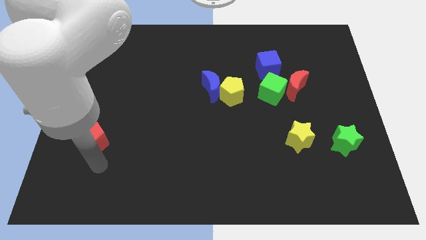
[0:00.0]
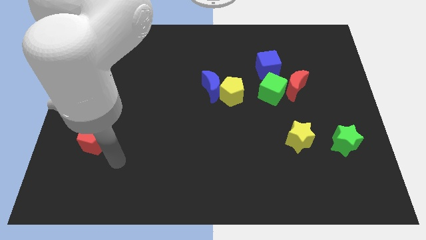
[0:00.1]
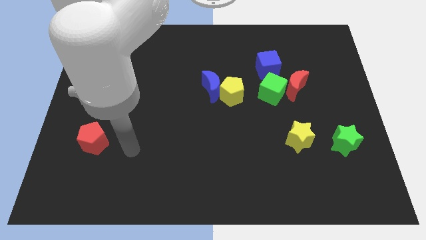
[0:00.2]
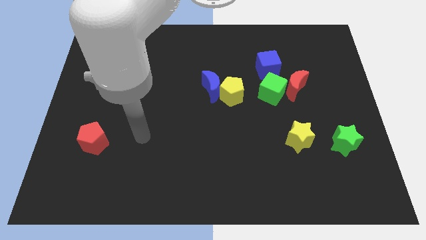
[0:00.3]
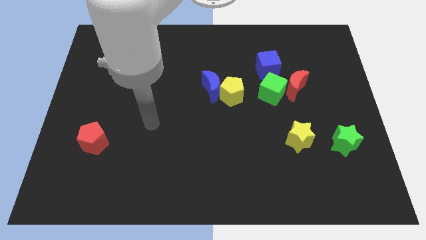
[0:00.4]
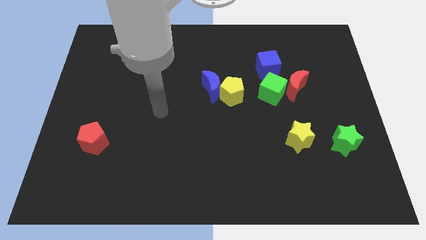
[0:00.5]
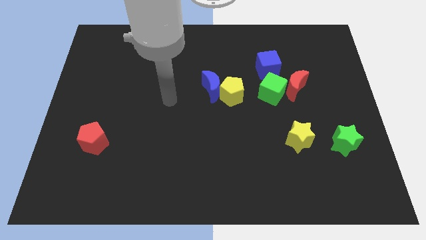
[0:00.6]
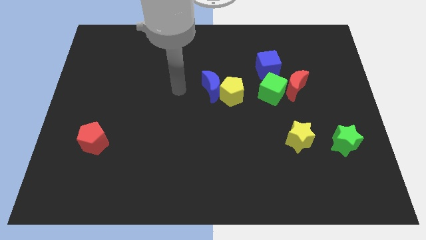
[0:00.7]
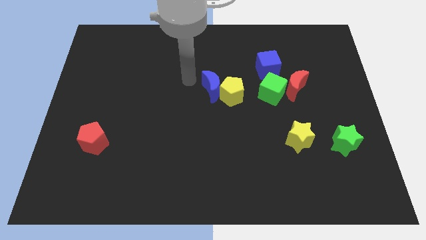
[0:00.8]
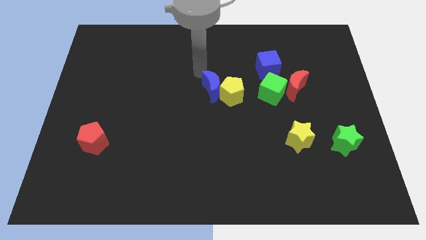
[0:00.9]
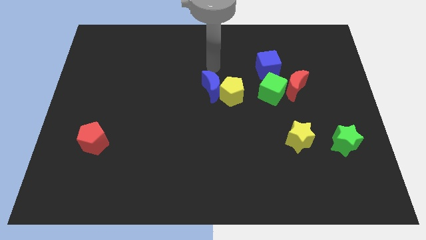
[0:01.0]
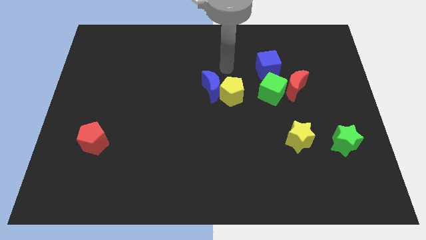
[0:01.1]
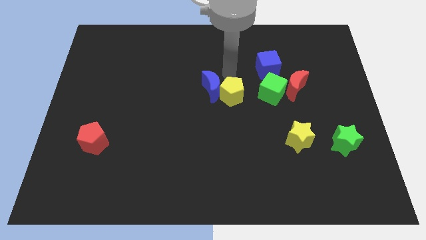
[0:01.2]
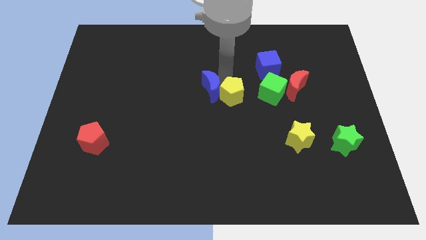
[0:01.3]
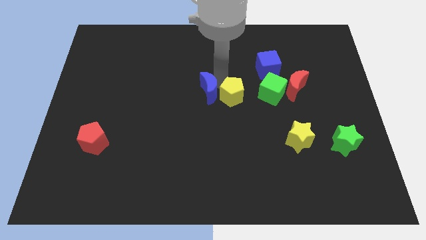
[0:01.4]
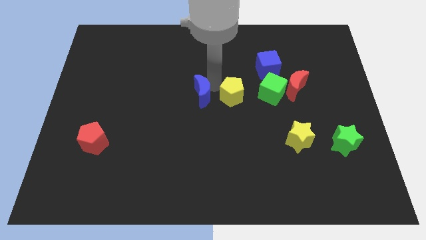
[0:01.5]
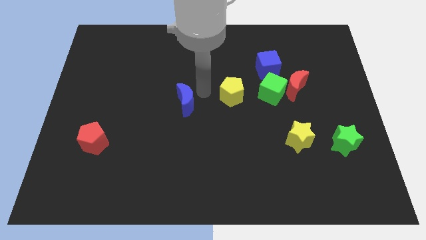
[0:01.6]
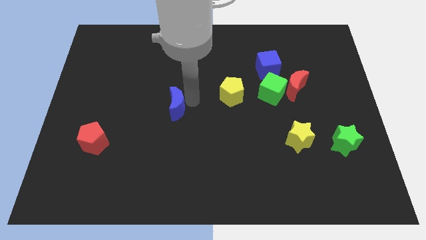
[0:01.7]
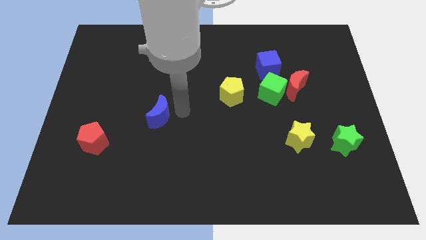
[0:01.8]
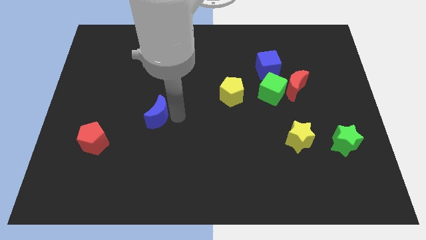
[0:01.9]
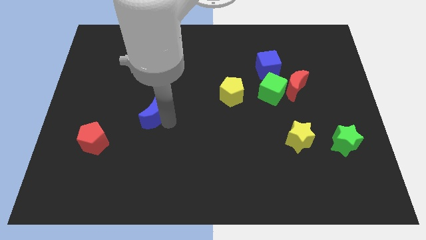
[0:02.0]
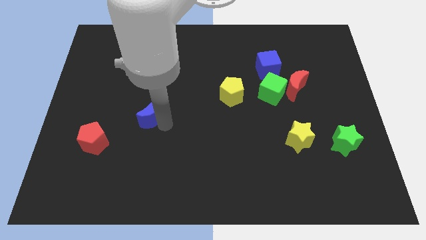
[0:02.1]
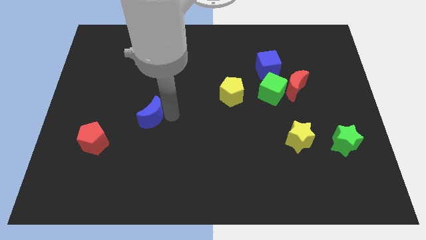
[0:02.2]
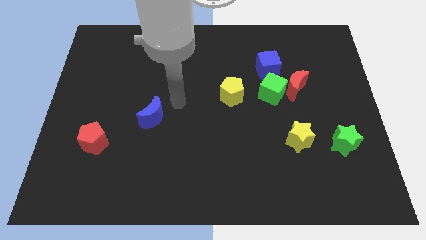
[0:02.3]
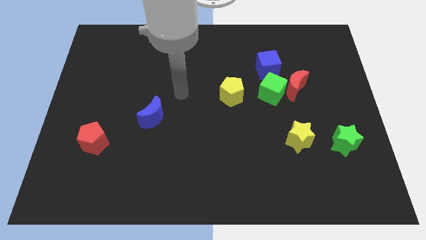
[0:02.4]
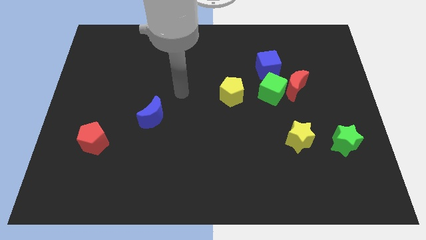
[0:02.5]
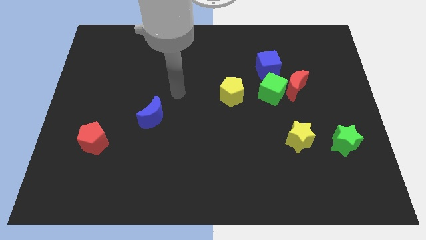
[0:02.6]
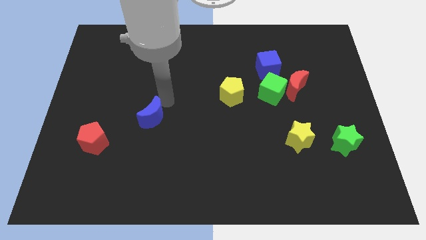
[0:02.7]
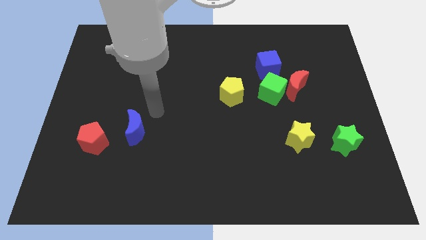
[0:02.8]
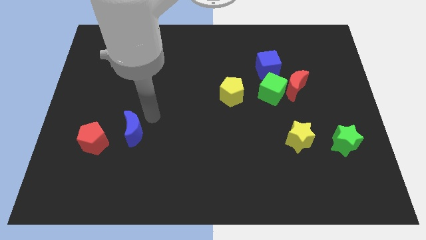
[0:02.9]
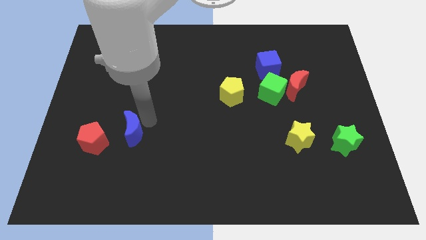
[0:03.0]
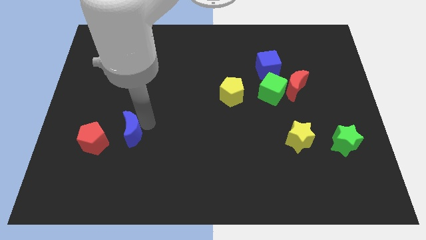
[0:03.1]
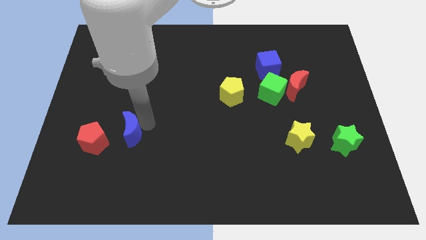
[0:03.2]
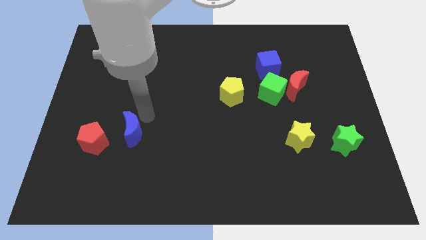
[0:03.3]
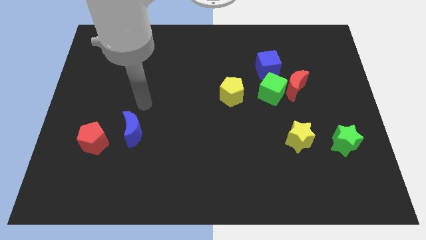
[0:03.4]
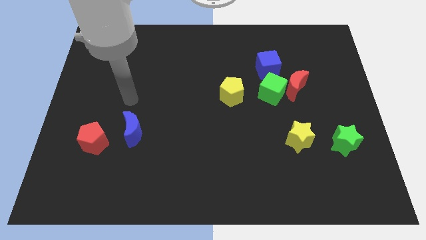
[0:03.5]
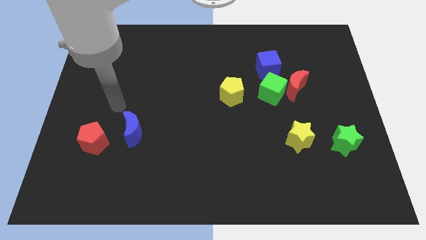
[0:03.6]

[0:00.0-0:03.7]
separate the blue moon and yellow pentagon

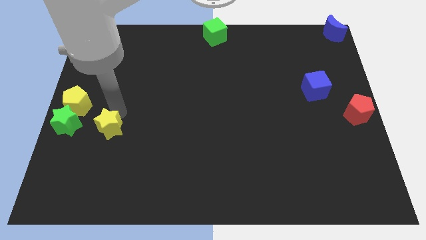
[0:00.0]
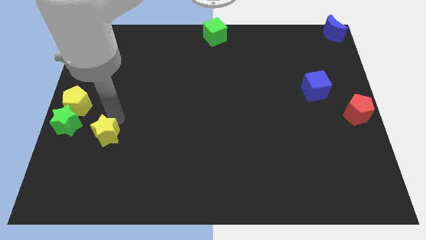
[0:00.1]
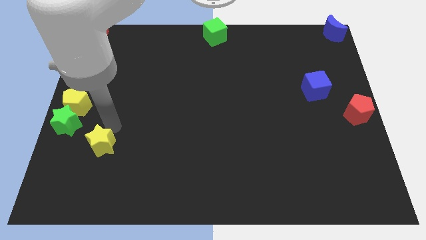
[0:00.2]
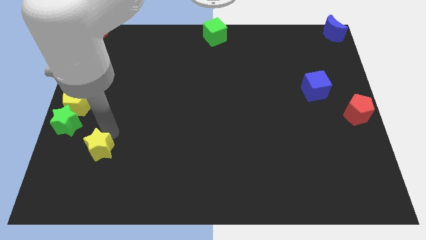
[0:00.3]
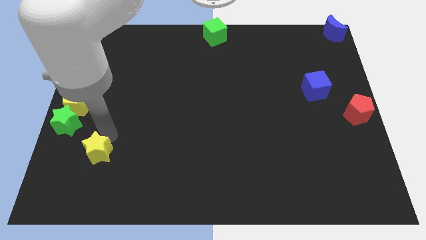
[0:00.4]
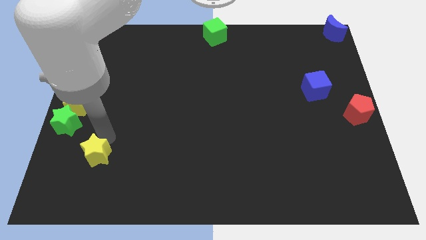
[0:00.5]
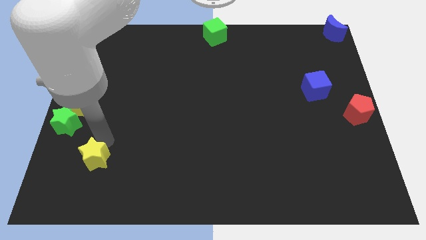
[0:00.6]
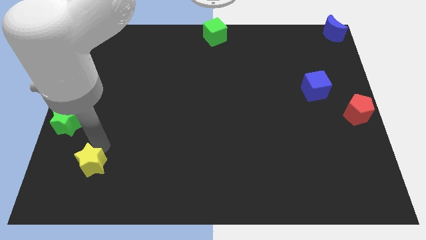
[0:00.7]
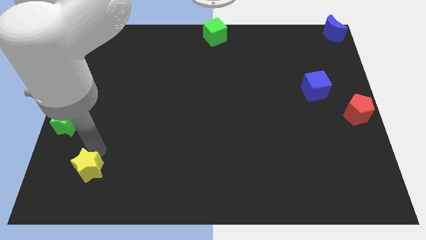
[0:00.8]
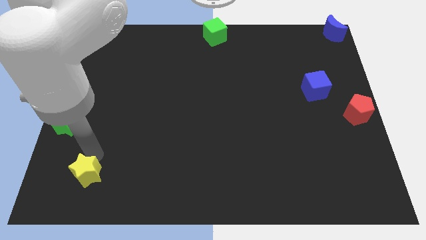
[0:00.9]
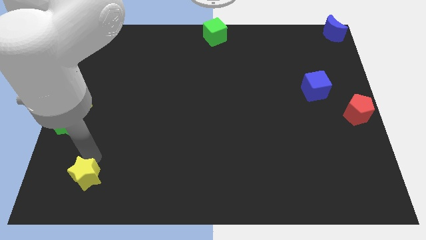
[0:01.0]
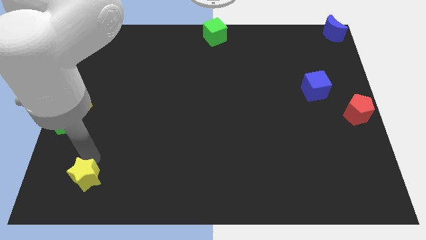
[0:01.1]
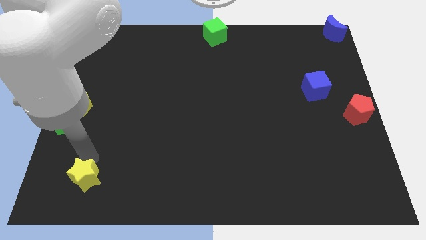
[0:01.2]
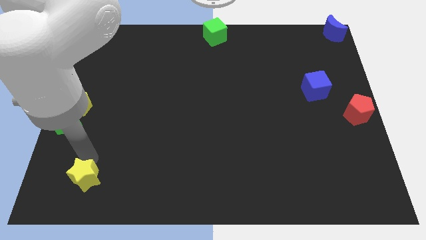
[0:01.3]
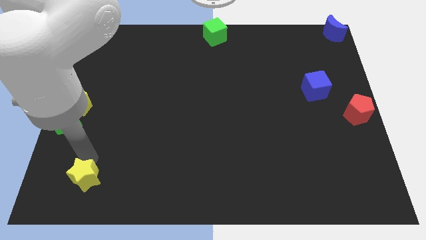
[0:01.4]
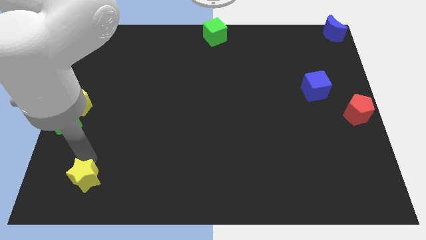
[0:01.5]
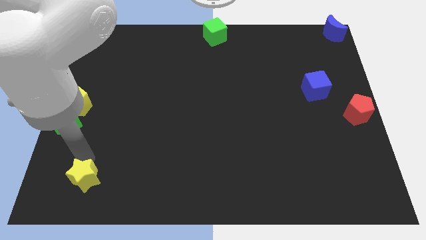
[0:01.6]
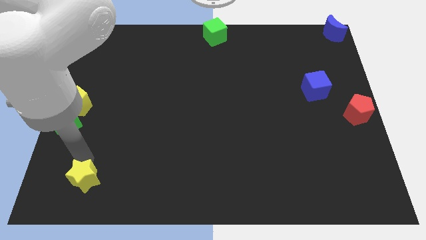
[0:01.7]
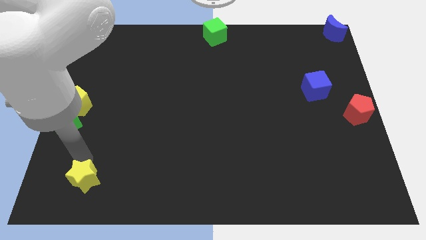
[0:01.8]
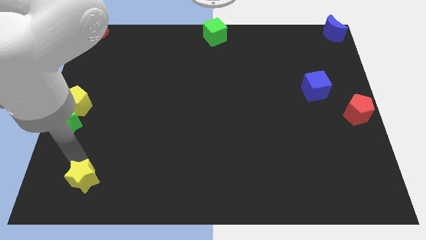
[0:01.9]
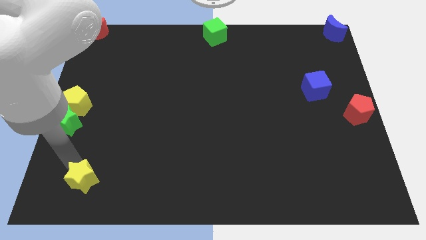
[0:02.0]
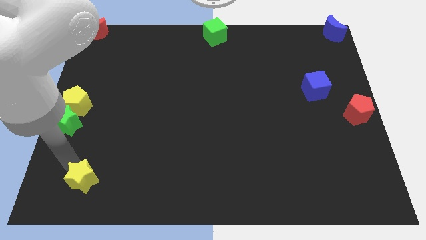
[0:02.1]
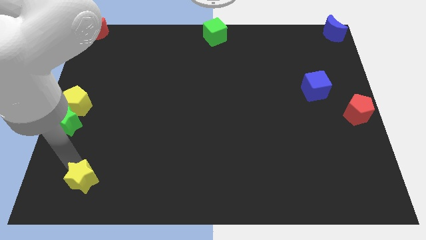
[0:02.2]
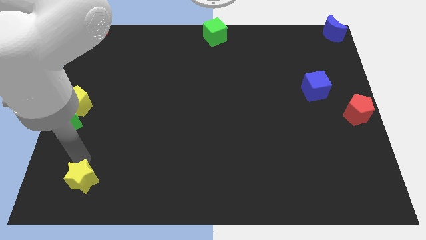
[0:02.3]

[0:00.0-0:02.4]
push the yellow star towards the bottom side of the board

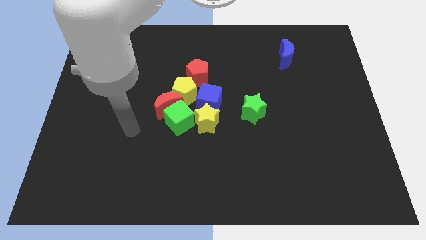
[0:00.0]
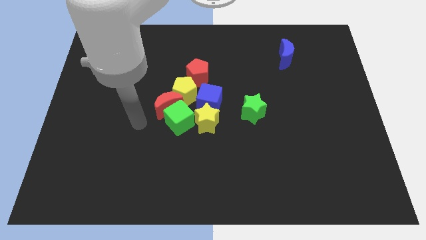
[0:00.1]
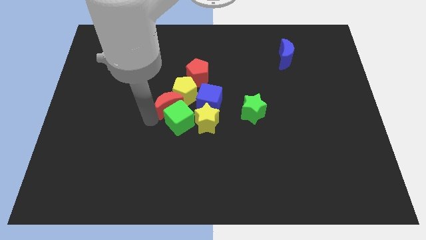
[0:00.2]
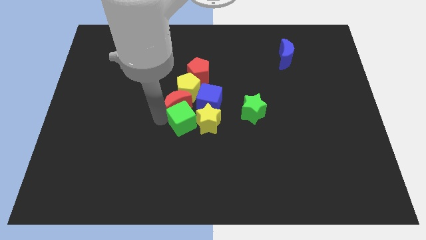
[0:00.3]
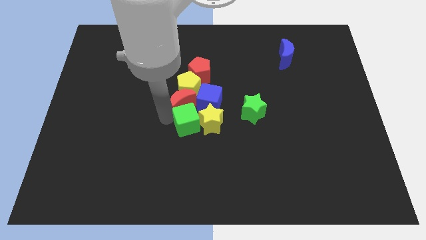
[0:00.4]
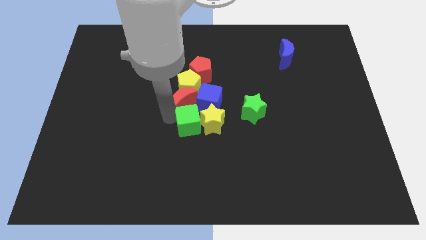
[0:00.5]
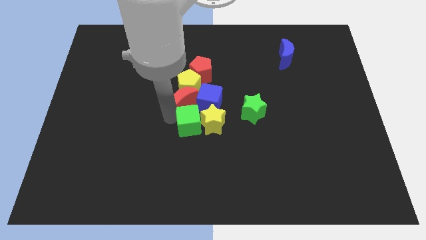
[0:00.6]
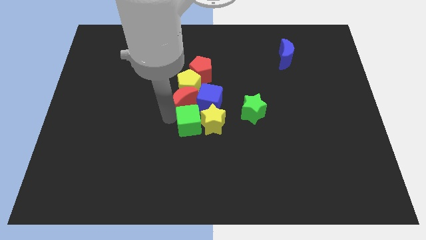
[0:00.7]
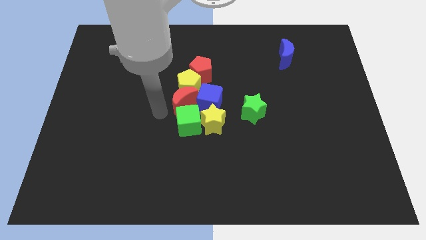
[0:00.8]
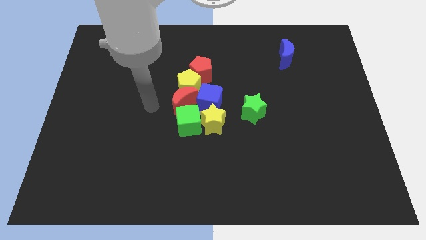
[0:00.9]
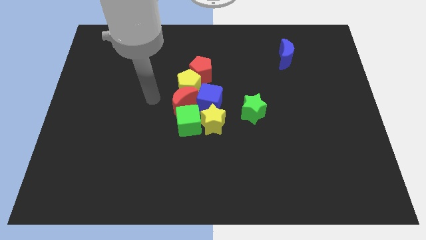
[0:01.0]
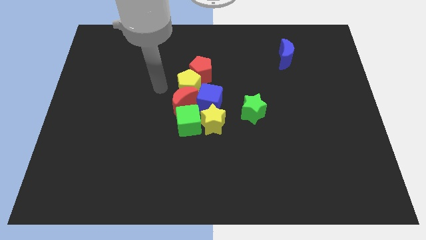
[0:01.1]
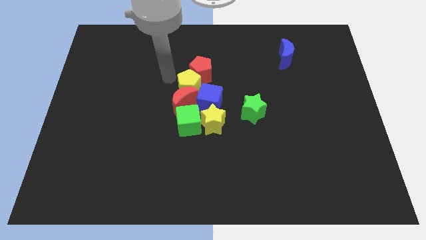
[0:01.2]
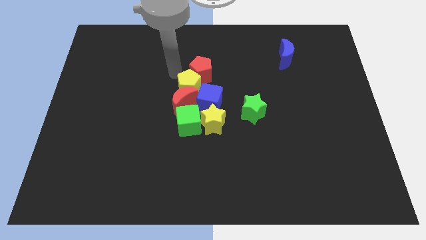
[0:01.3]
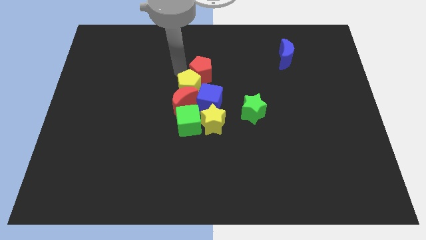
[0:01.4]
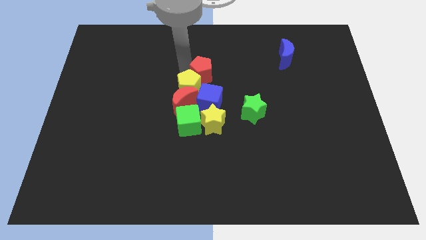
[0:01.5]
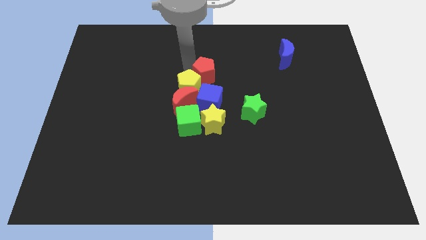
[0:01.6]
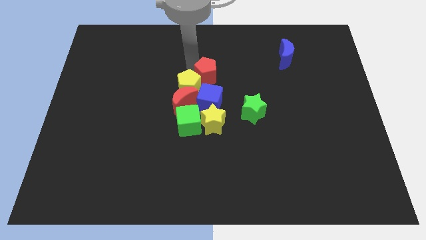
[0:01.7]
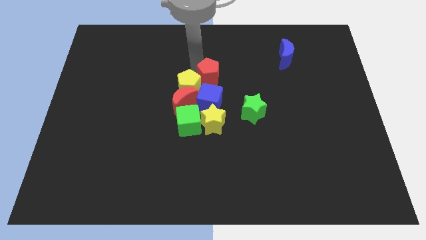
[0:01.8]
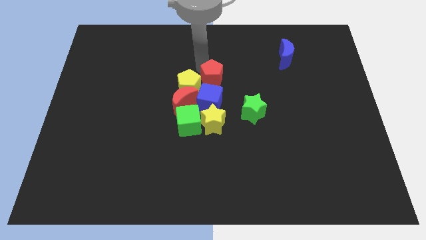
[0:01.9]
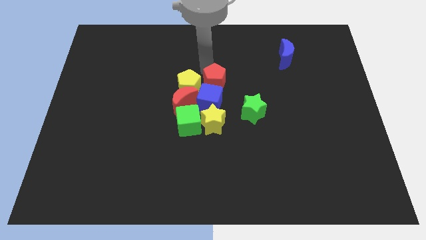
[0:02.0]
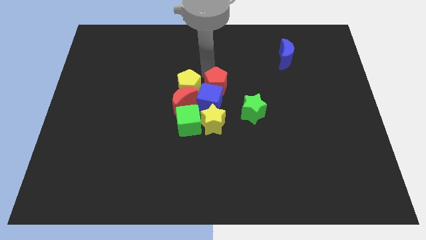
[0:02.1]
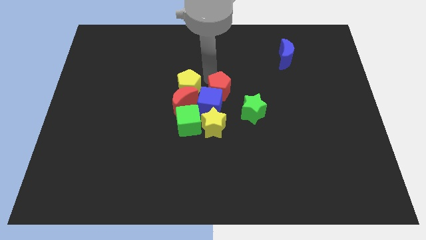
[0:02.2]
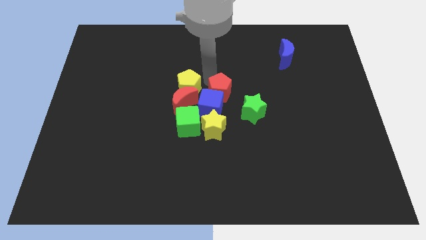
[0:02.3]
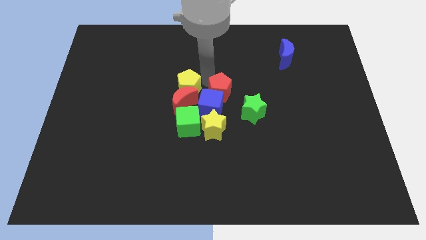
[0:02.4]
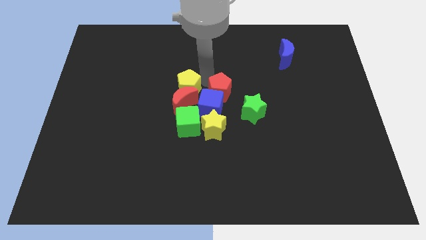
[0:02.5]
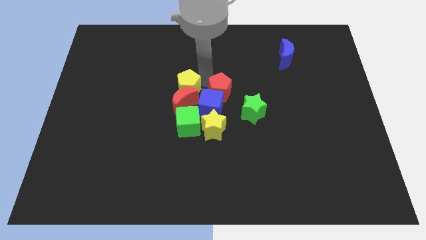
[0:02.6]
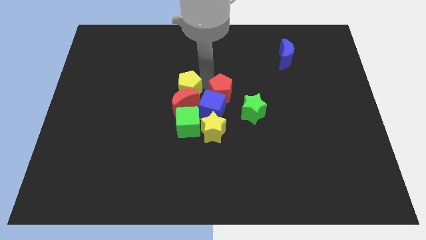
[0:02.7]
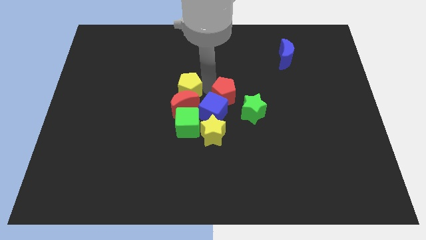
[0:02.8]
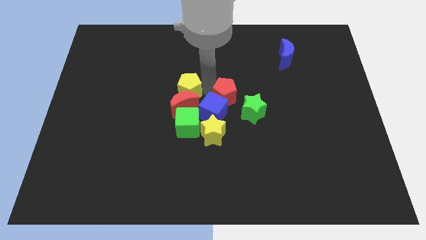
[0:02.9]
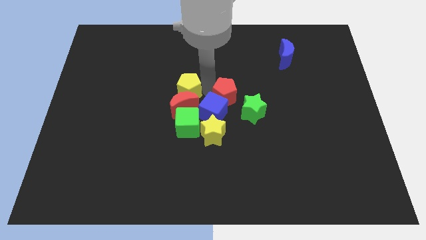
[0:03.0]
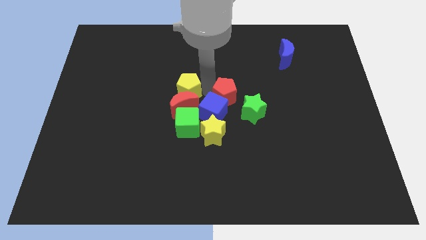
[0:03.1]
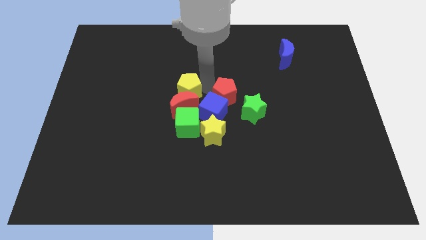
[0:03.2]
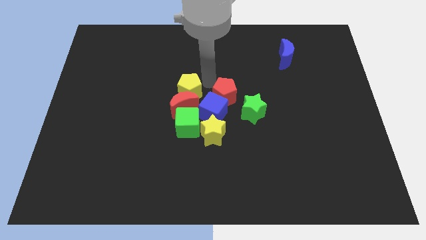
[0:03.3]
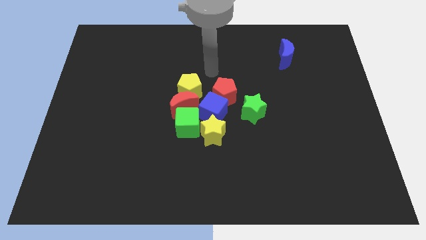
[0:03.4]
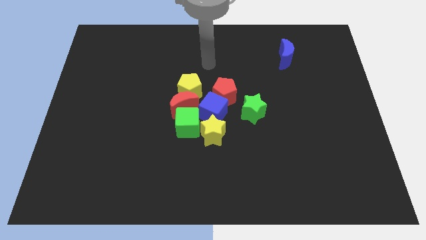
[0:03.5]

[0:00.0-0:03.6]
place the red pentagon to the center of the board
